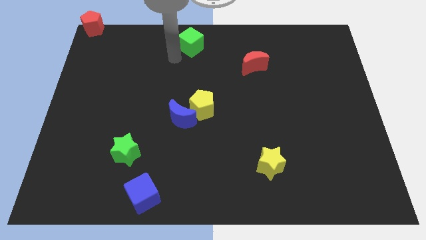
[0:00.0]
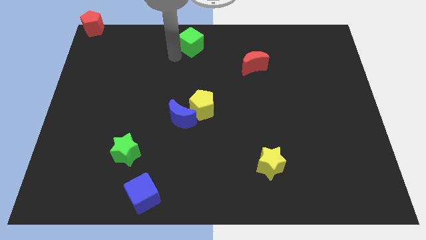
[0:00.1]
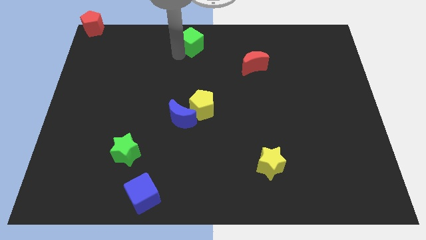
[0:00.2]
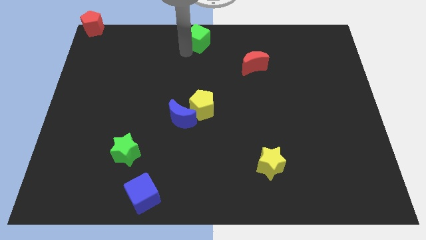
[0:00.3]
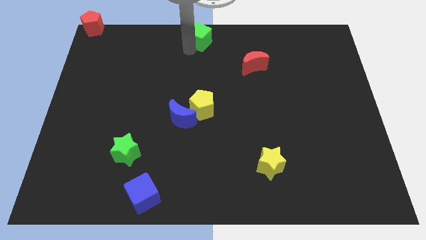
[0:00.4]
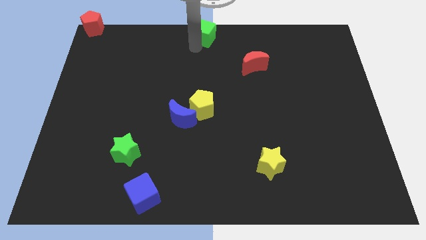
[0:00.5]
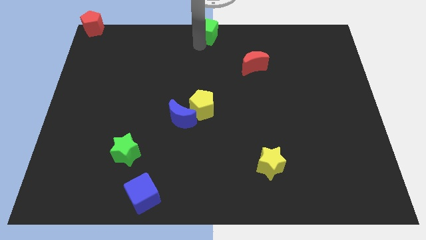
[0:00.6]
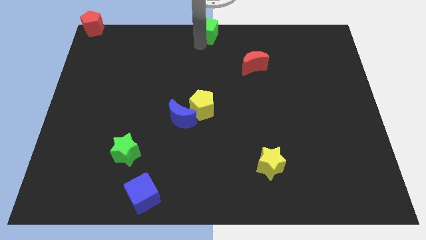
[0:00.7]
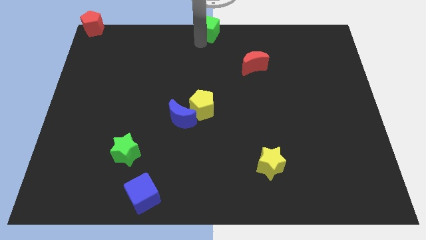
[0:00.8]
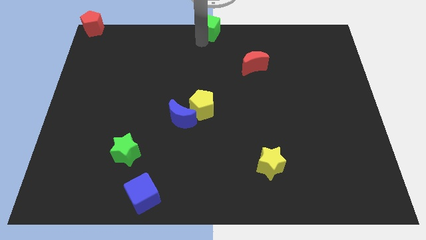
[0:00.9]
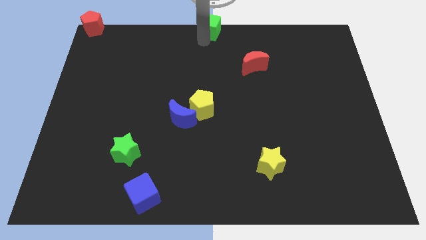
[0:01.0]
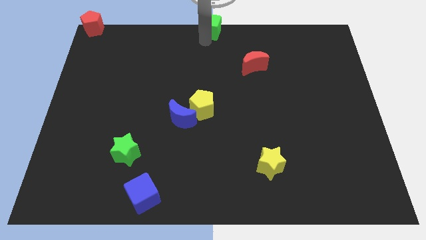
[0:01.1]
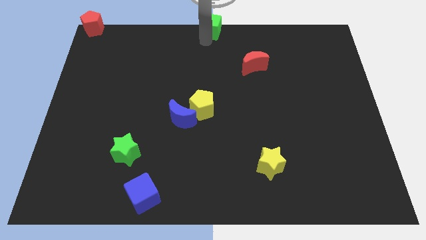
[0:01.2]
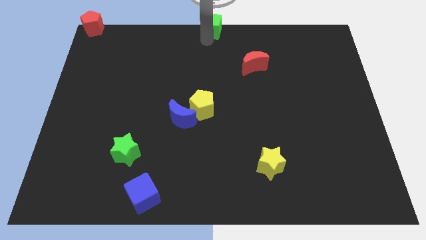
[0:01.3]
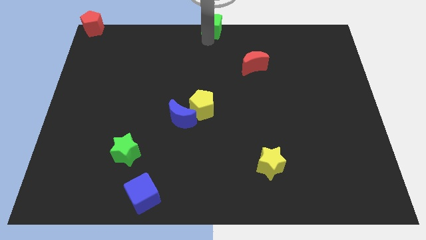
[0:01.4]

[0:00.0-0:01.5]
place the green cube in the top middle

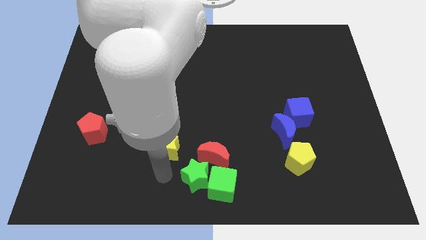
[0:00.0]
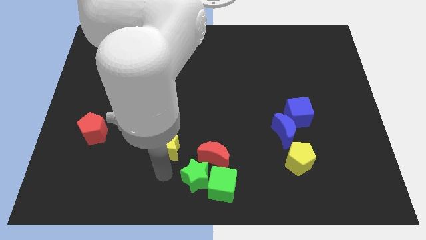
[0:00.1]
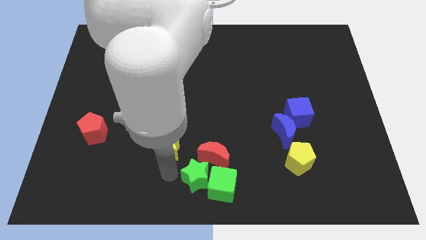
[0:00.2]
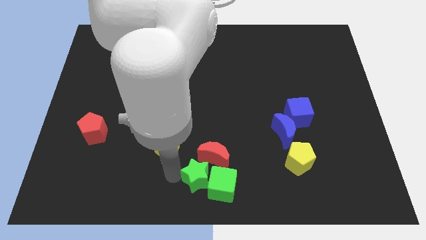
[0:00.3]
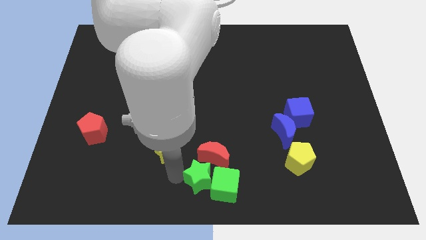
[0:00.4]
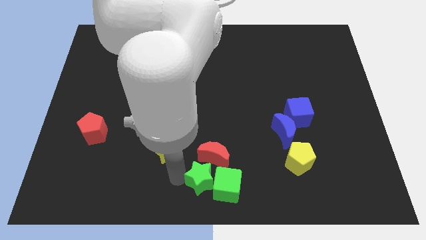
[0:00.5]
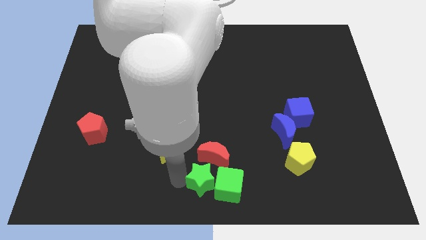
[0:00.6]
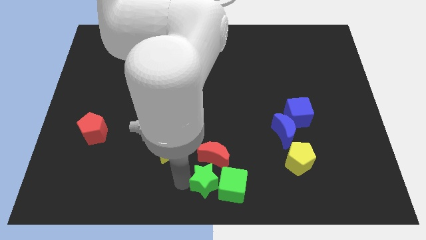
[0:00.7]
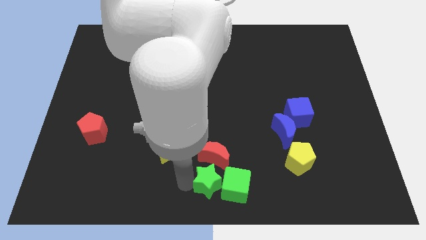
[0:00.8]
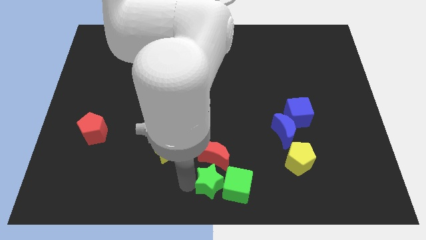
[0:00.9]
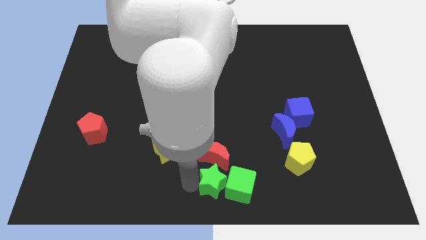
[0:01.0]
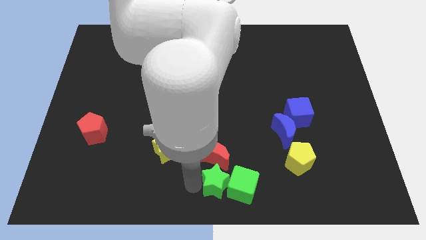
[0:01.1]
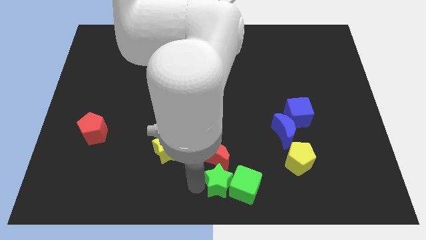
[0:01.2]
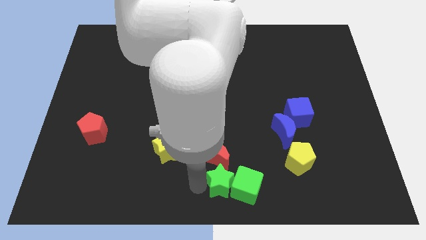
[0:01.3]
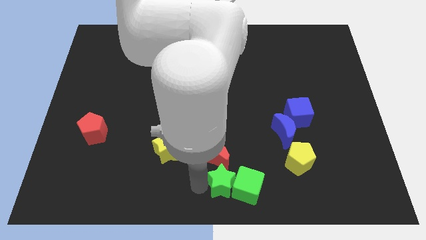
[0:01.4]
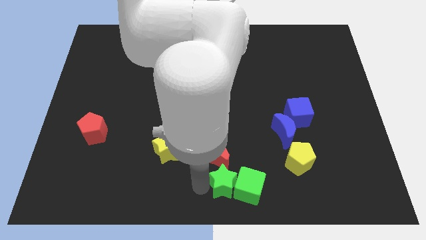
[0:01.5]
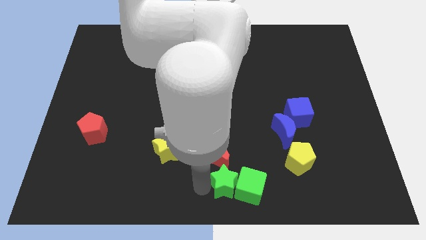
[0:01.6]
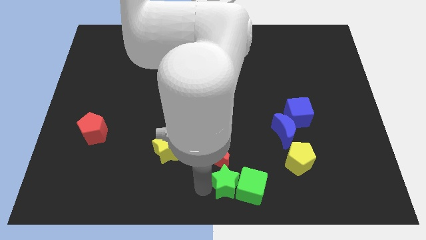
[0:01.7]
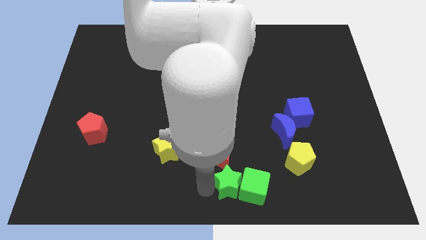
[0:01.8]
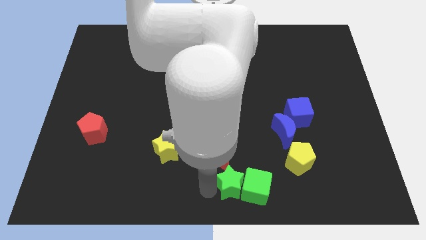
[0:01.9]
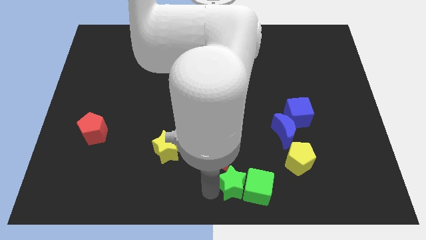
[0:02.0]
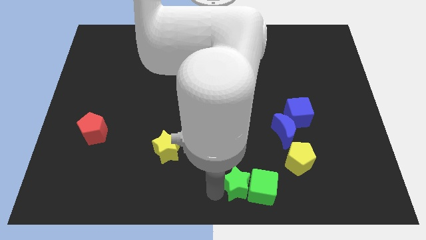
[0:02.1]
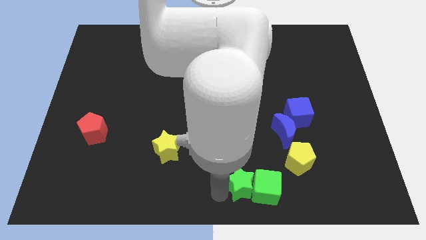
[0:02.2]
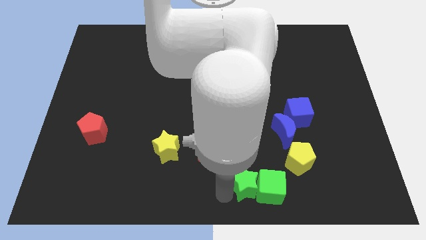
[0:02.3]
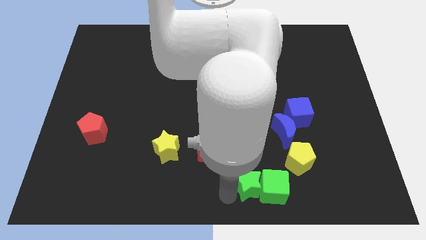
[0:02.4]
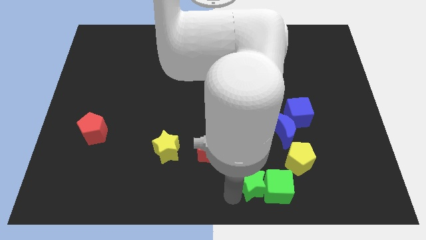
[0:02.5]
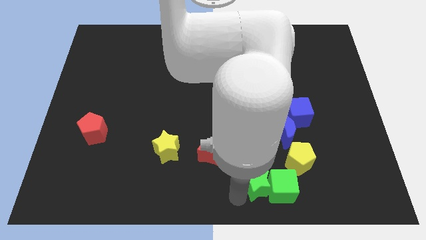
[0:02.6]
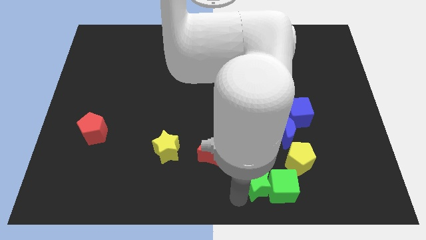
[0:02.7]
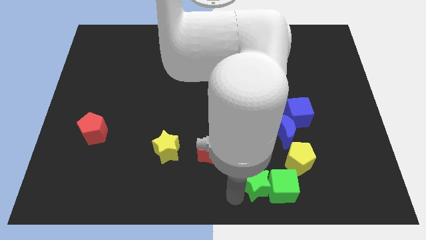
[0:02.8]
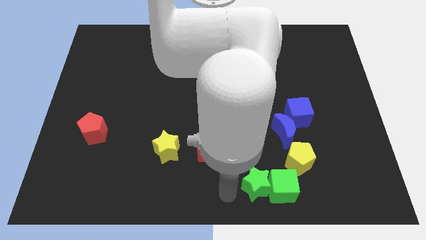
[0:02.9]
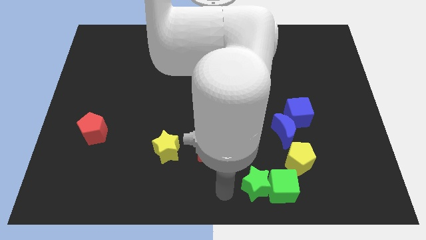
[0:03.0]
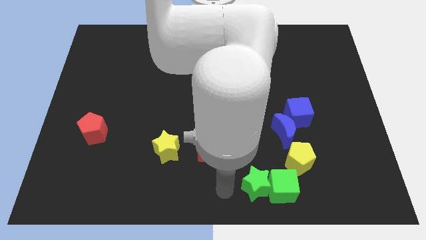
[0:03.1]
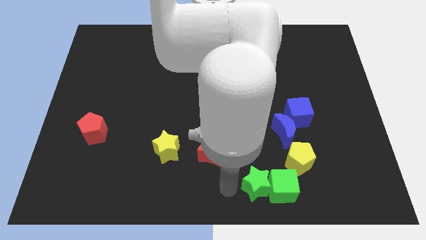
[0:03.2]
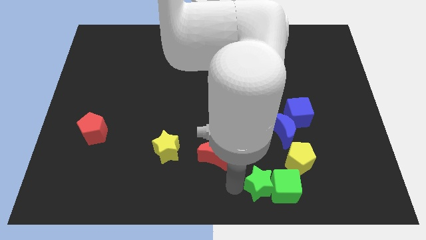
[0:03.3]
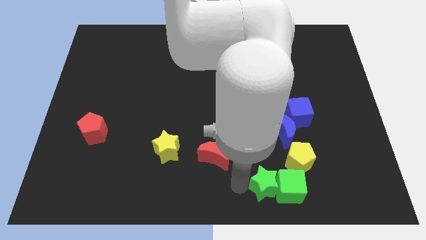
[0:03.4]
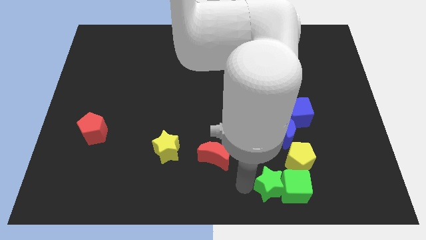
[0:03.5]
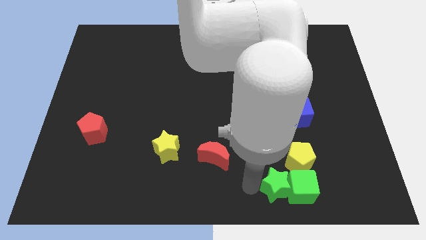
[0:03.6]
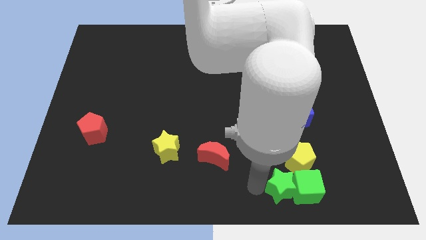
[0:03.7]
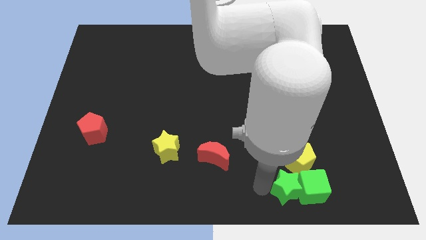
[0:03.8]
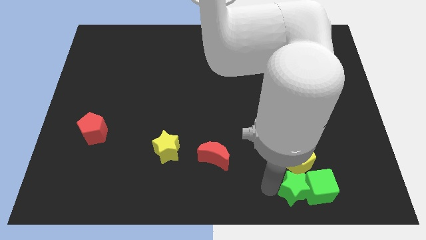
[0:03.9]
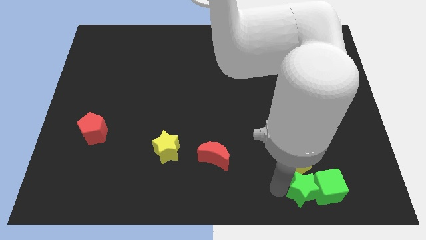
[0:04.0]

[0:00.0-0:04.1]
place both the green star and green cube to the bottom of yellow pentagon

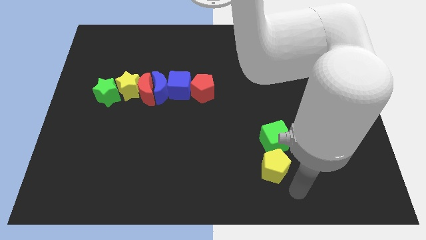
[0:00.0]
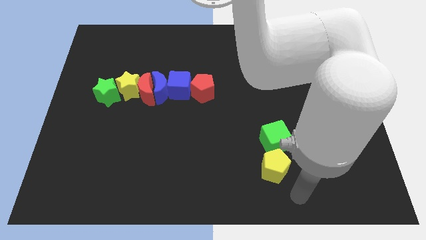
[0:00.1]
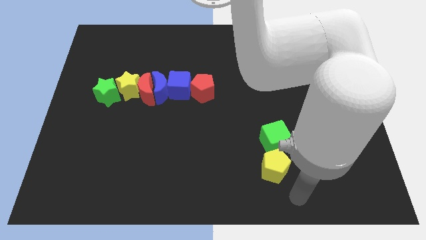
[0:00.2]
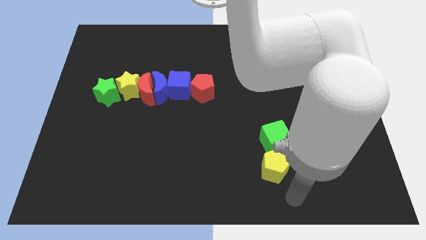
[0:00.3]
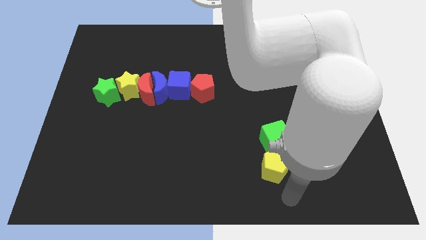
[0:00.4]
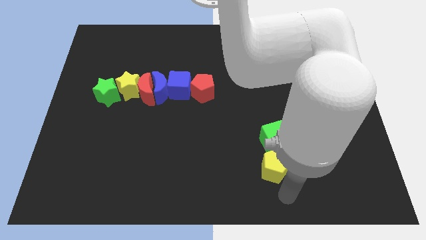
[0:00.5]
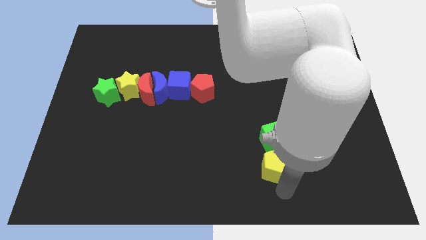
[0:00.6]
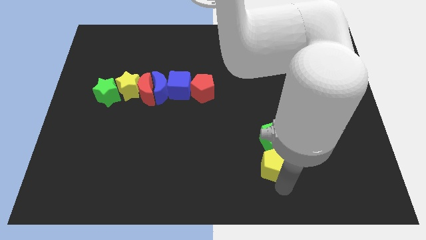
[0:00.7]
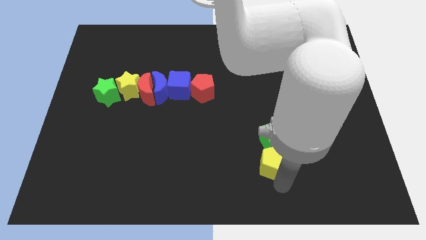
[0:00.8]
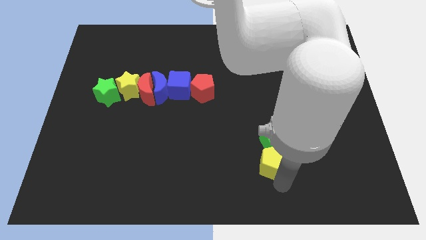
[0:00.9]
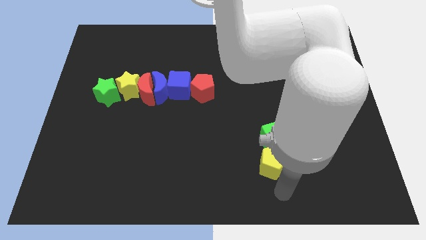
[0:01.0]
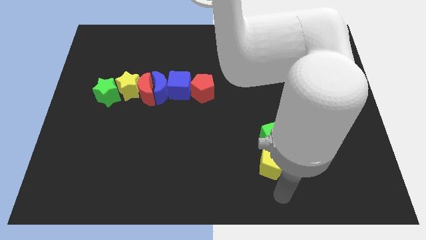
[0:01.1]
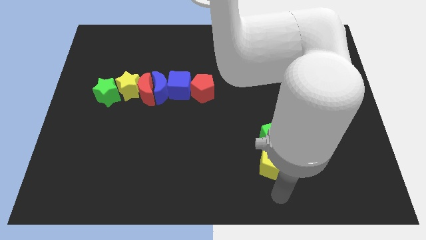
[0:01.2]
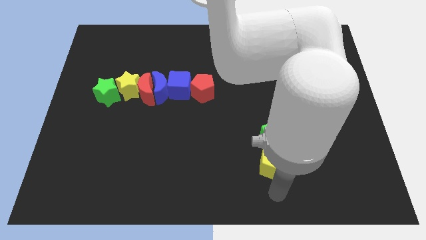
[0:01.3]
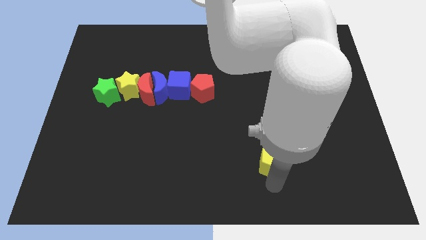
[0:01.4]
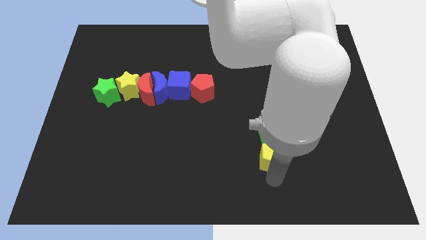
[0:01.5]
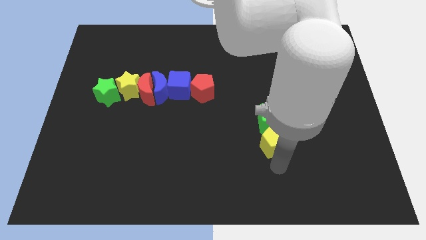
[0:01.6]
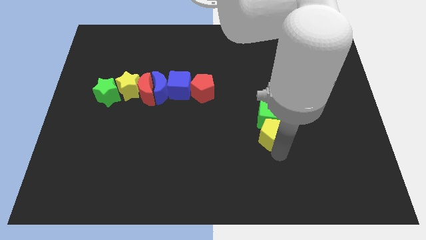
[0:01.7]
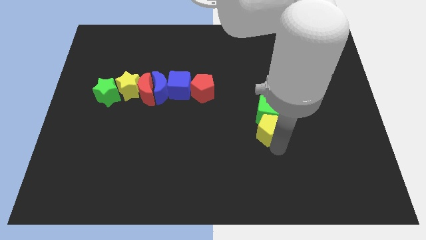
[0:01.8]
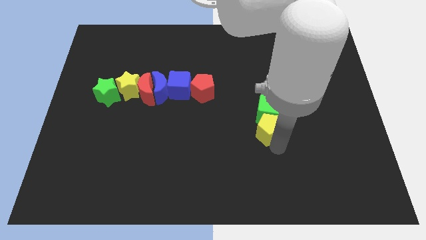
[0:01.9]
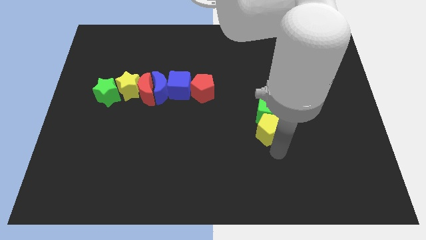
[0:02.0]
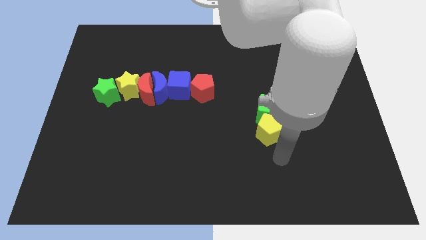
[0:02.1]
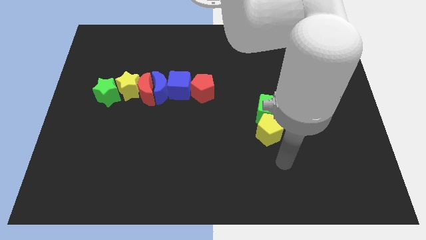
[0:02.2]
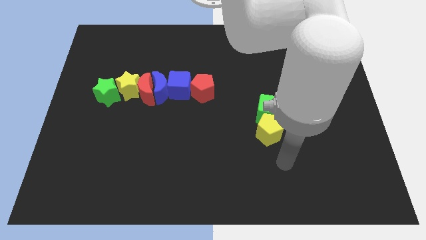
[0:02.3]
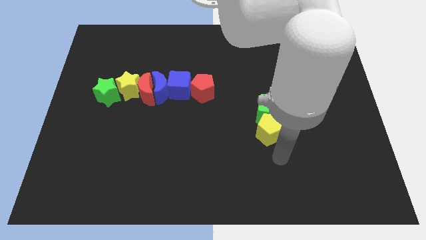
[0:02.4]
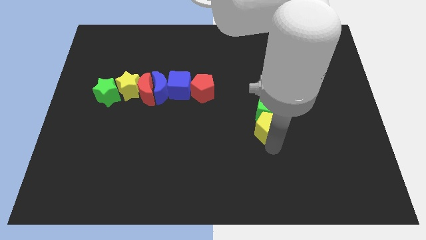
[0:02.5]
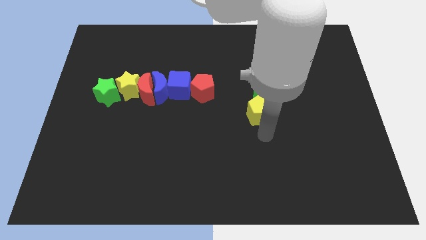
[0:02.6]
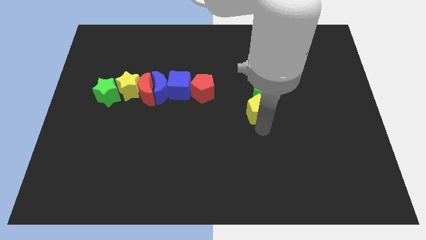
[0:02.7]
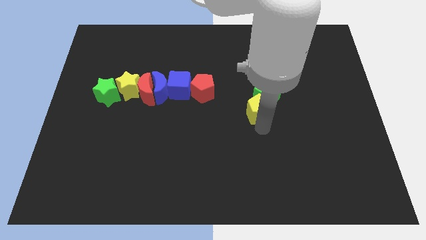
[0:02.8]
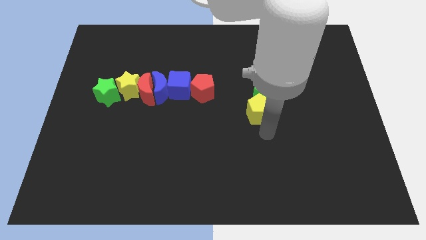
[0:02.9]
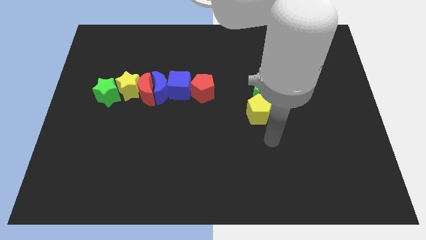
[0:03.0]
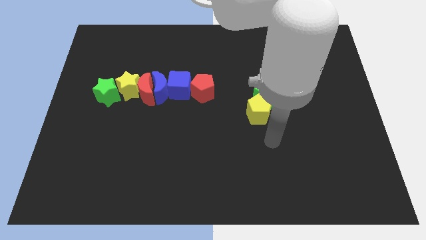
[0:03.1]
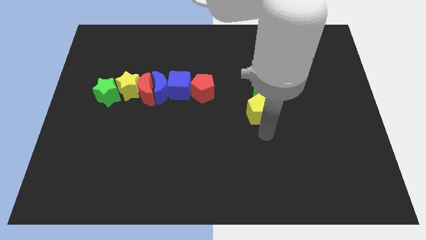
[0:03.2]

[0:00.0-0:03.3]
move yellow pentagon along with green cube to the right of red pentagon

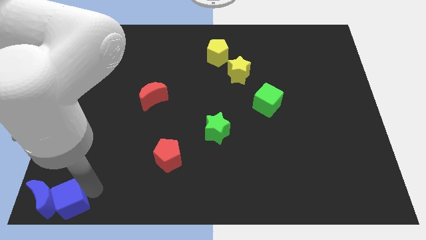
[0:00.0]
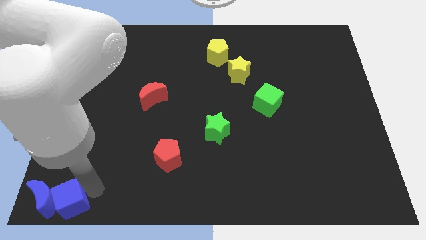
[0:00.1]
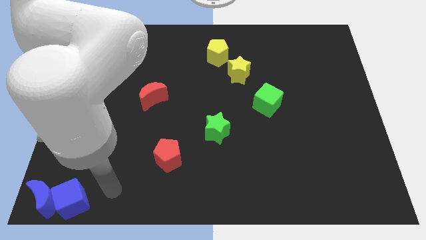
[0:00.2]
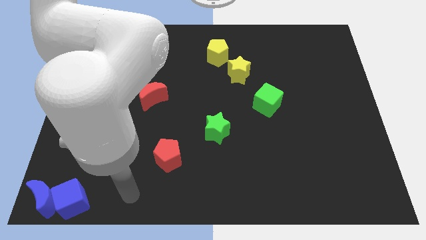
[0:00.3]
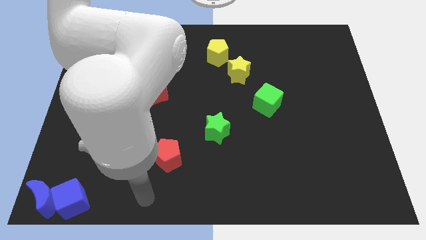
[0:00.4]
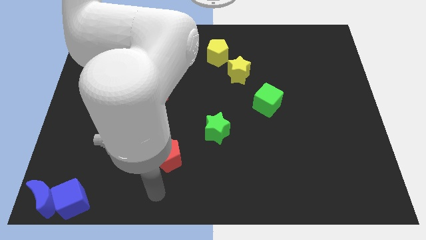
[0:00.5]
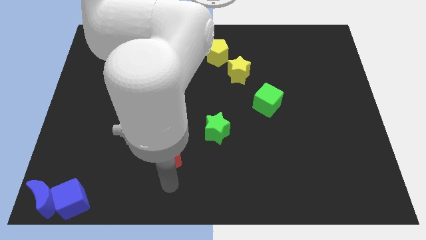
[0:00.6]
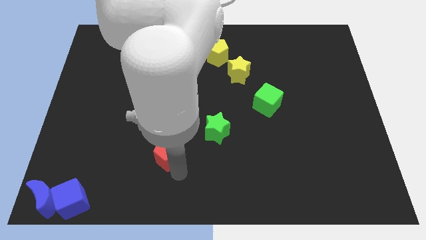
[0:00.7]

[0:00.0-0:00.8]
touch the red pentagon at the bottom
